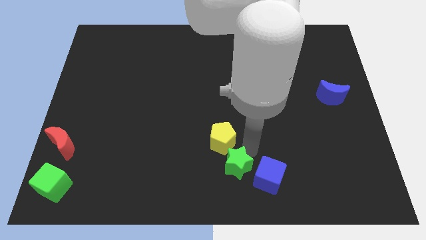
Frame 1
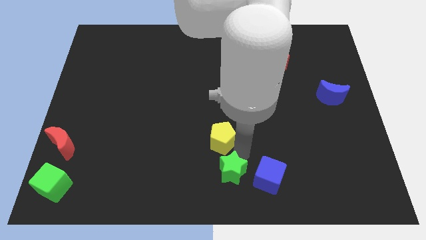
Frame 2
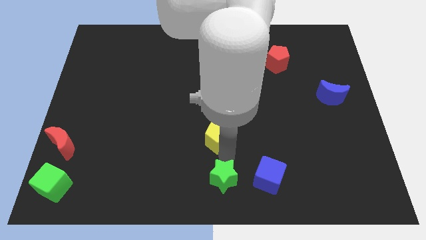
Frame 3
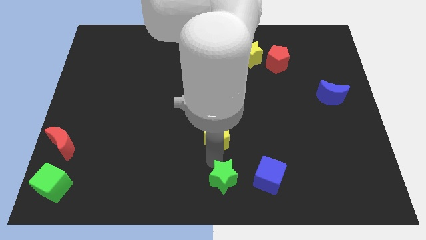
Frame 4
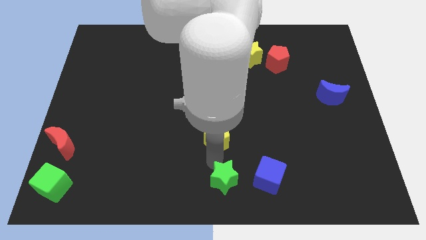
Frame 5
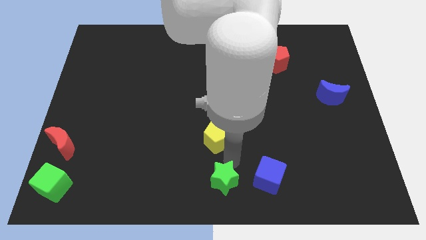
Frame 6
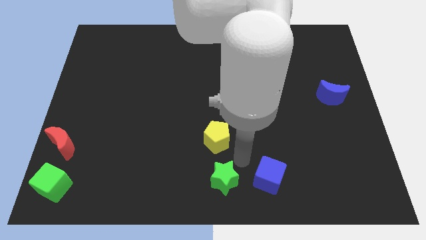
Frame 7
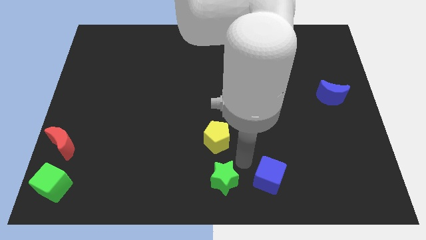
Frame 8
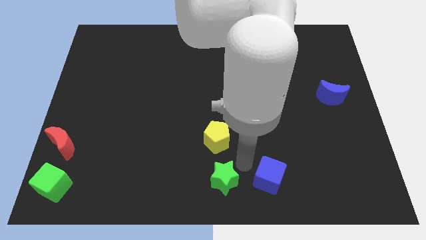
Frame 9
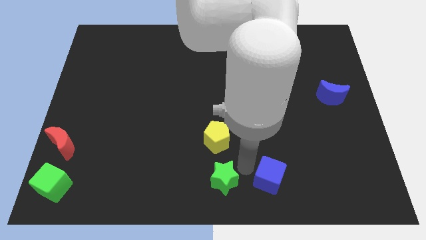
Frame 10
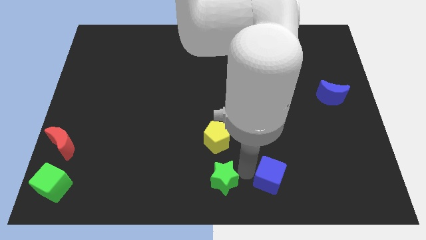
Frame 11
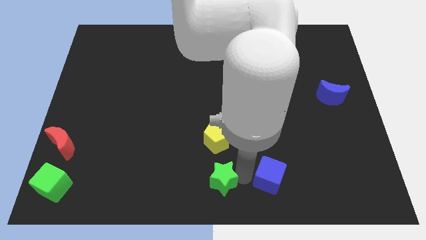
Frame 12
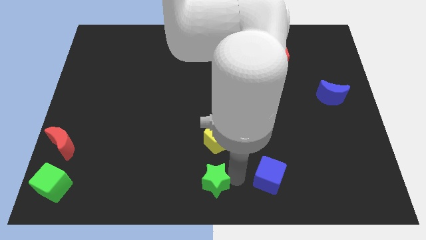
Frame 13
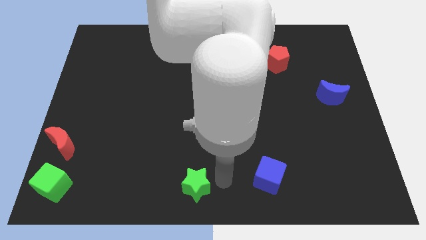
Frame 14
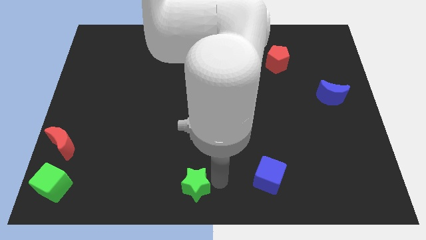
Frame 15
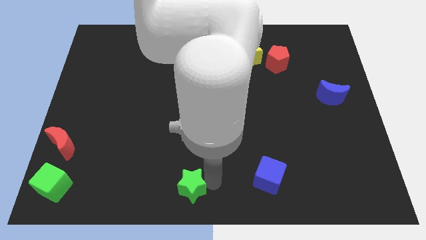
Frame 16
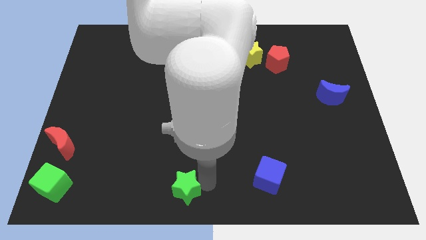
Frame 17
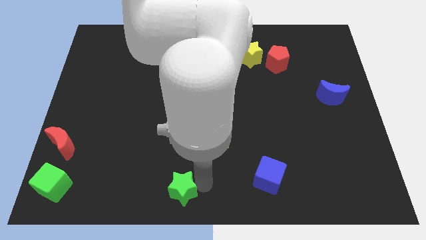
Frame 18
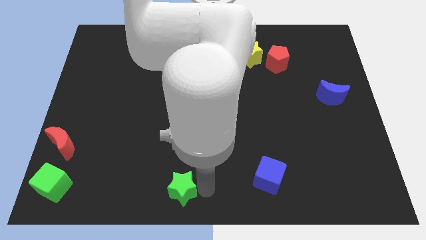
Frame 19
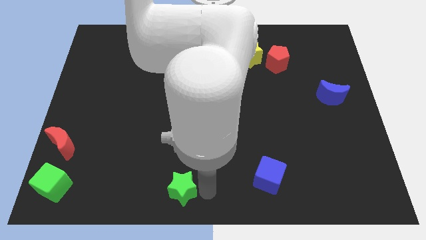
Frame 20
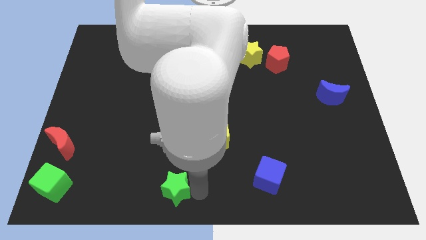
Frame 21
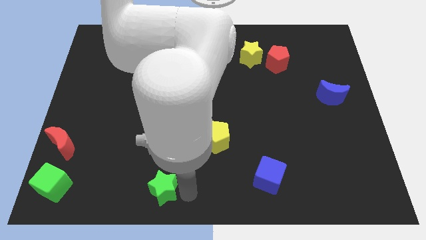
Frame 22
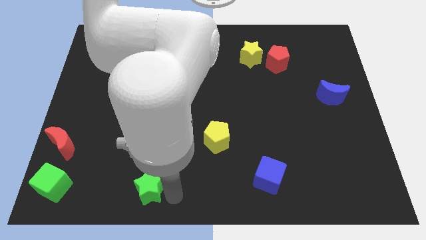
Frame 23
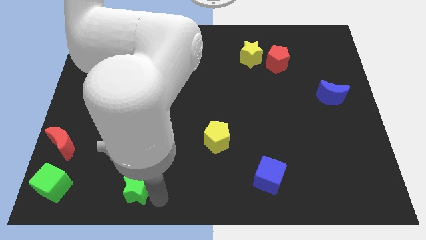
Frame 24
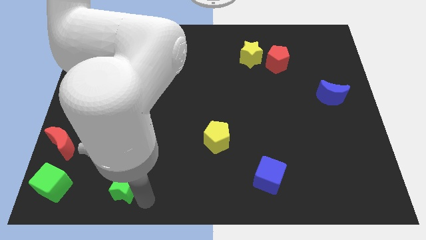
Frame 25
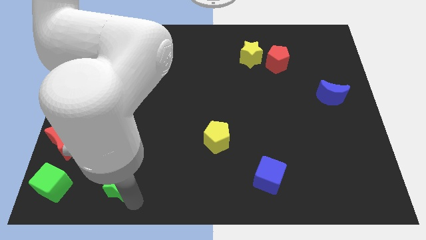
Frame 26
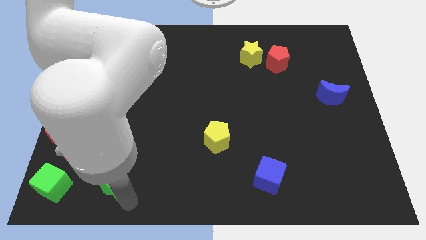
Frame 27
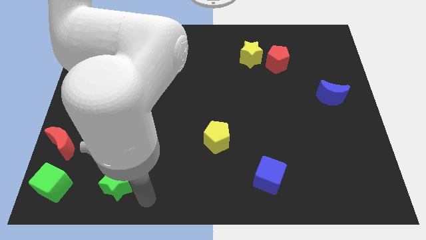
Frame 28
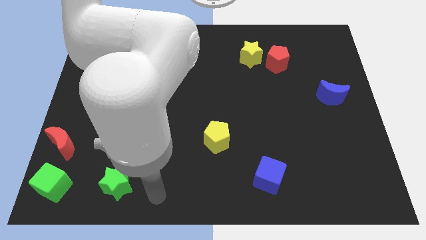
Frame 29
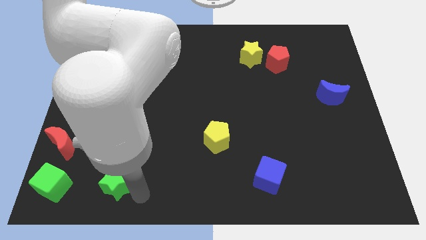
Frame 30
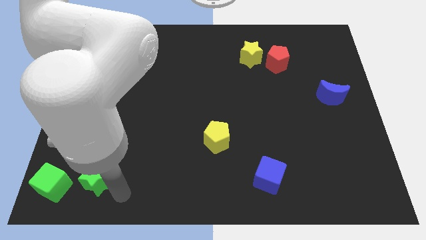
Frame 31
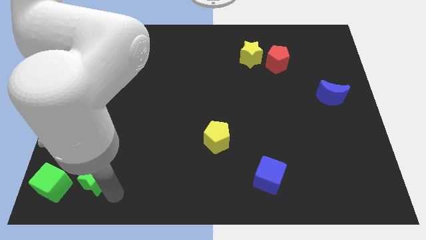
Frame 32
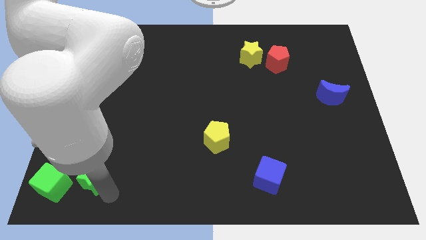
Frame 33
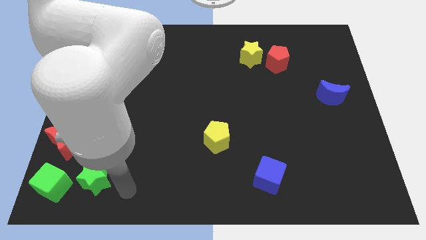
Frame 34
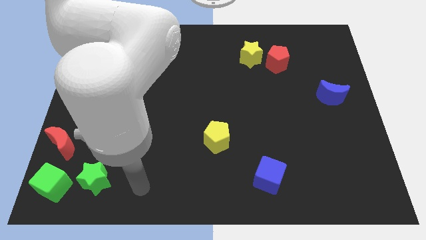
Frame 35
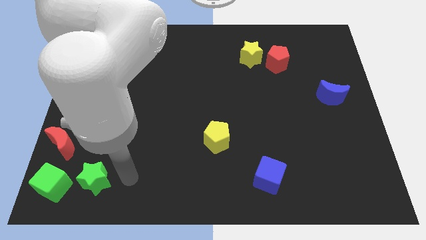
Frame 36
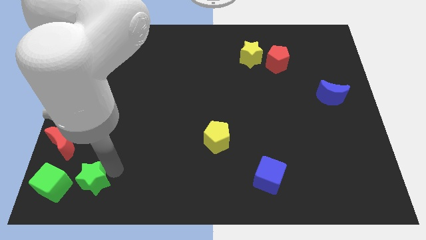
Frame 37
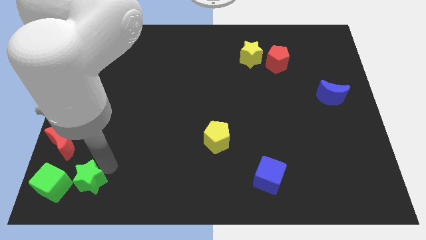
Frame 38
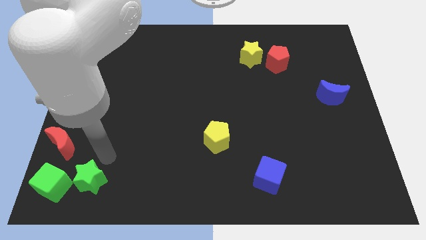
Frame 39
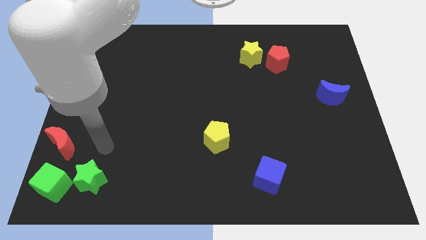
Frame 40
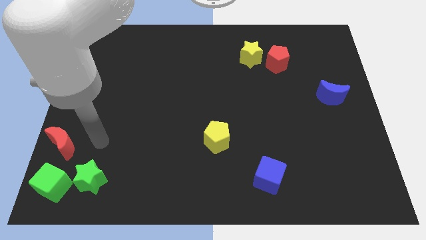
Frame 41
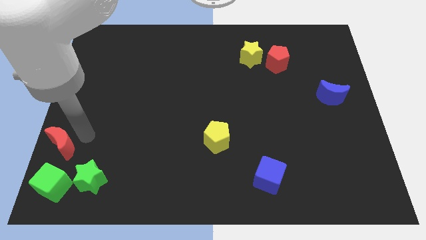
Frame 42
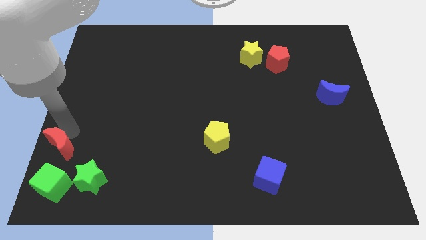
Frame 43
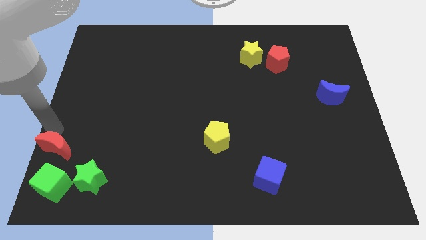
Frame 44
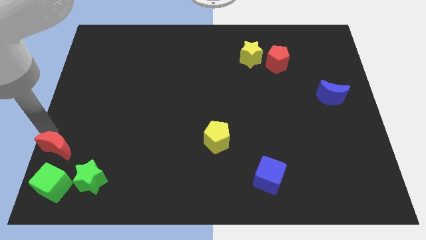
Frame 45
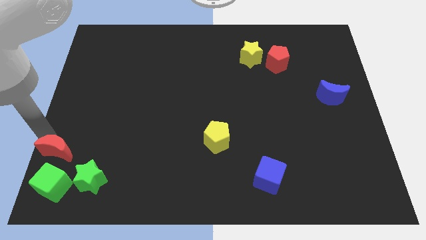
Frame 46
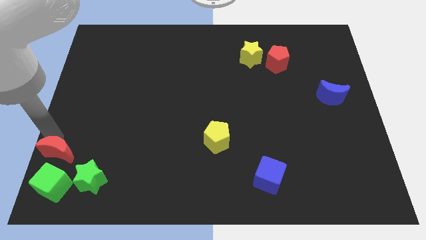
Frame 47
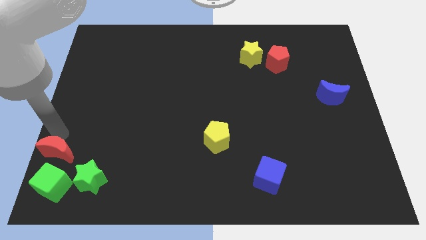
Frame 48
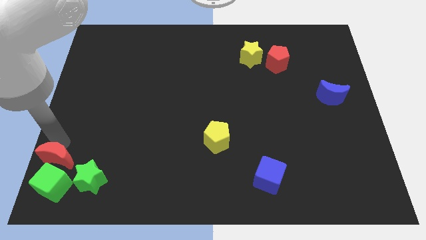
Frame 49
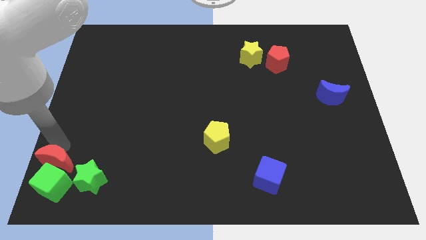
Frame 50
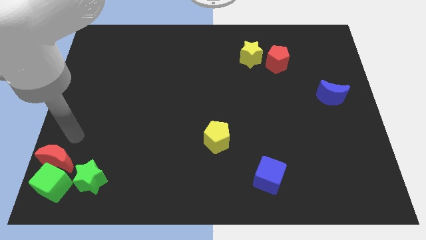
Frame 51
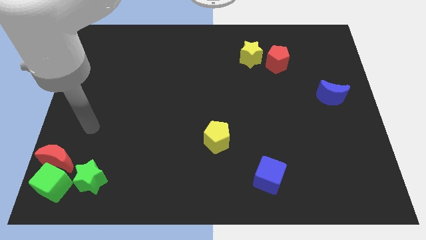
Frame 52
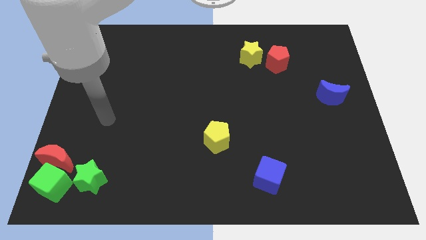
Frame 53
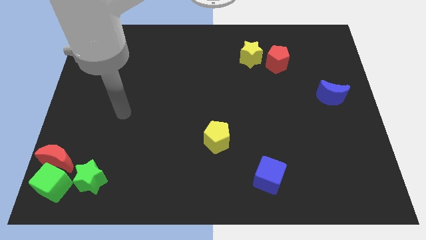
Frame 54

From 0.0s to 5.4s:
make the green star and red crescent to touch the green cube

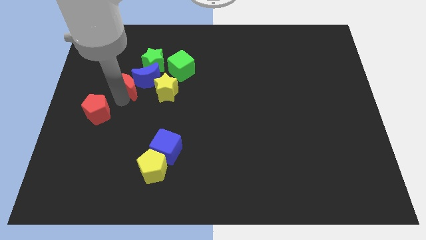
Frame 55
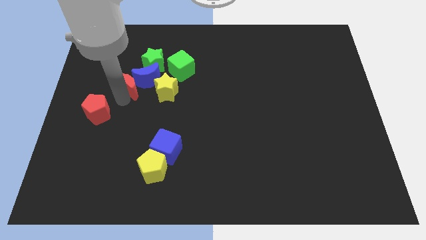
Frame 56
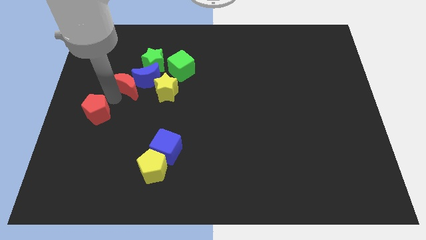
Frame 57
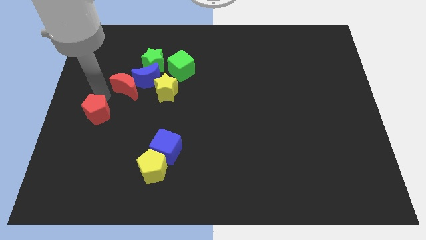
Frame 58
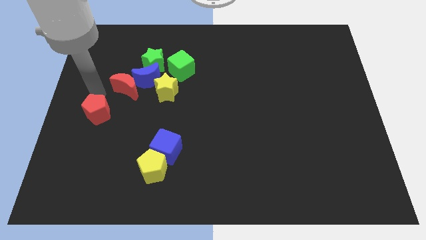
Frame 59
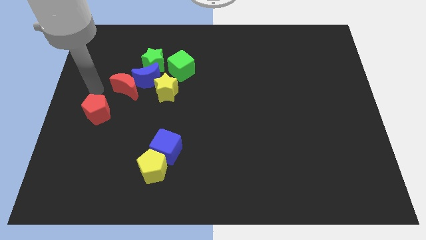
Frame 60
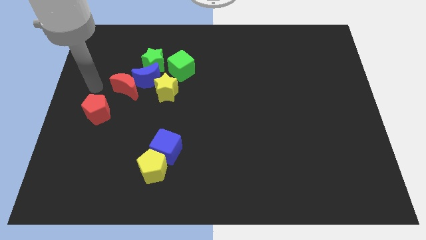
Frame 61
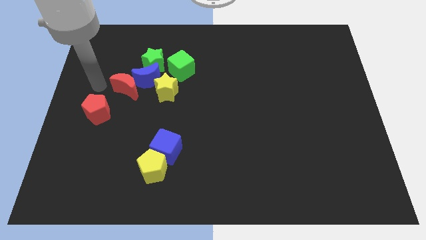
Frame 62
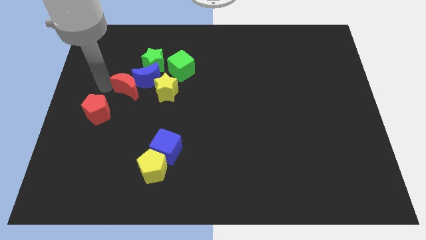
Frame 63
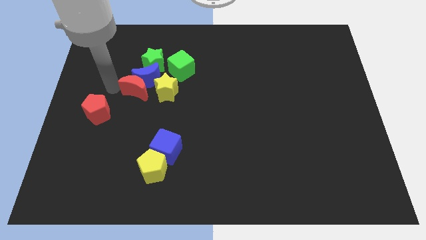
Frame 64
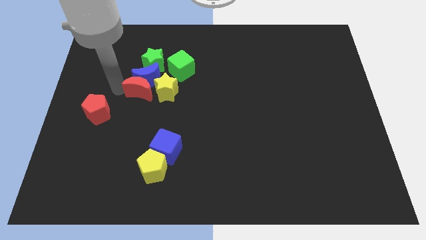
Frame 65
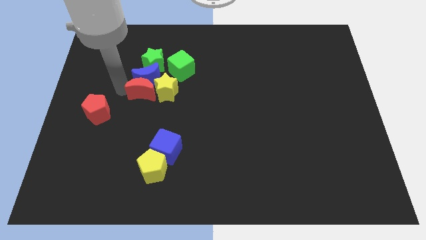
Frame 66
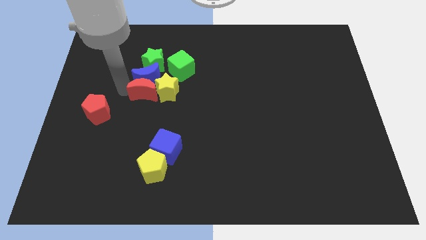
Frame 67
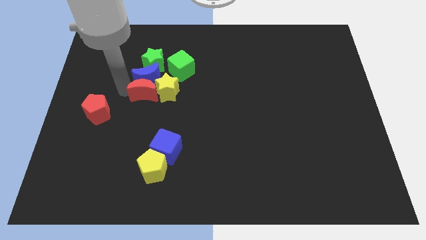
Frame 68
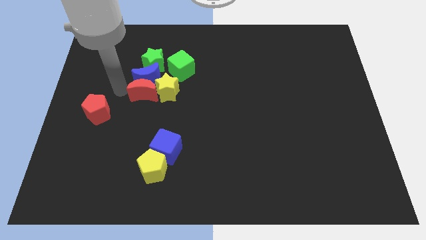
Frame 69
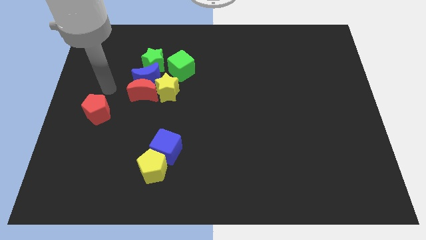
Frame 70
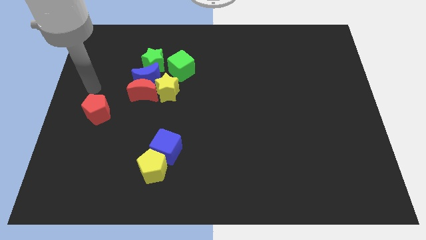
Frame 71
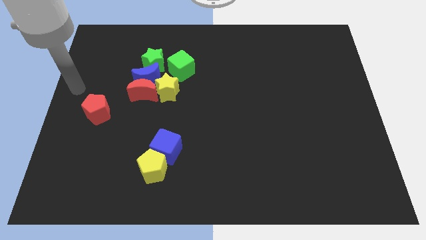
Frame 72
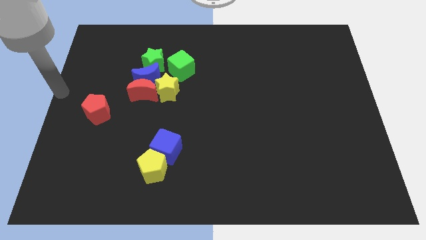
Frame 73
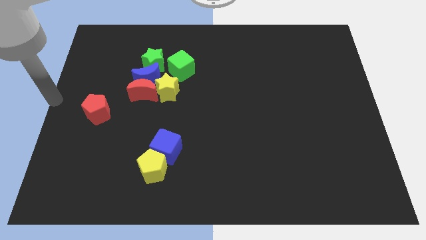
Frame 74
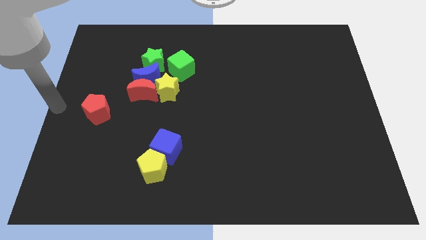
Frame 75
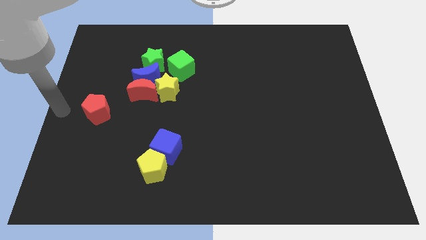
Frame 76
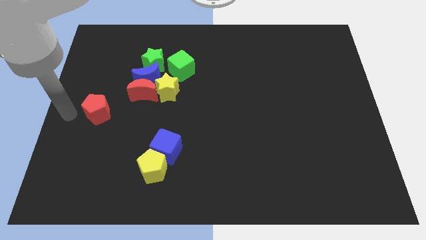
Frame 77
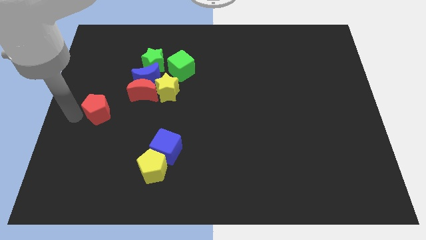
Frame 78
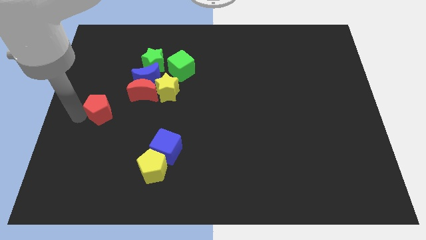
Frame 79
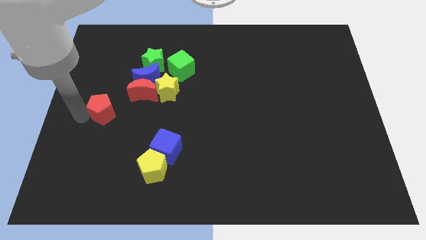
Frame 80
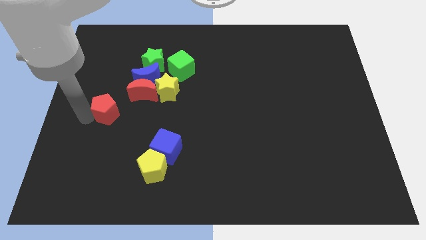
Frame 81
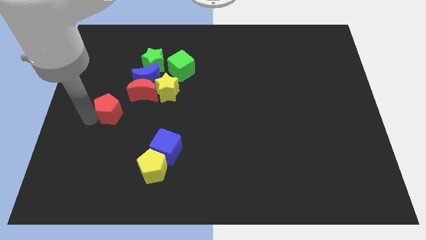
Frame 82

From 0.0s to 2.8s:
push the red crescent close to the yellow star

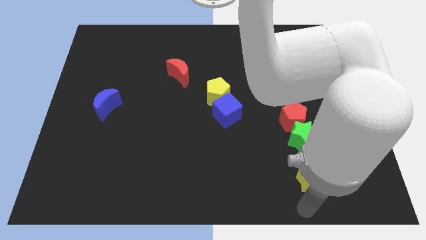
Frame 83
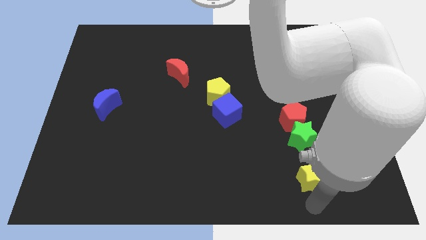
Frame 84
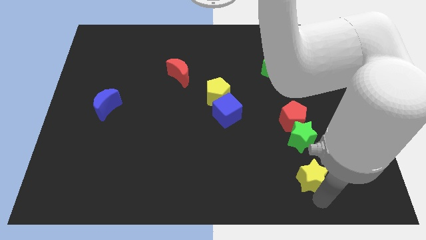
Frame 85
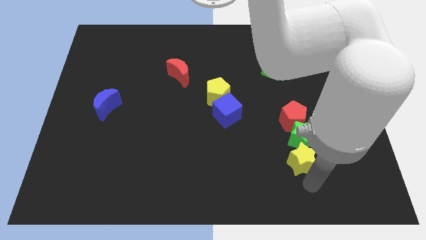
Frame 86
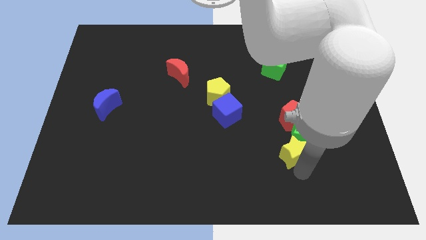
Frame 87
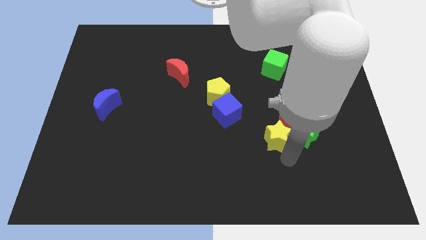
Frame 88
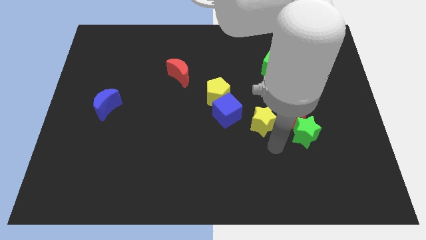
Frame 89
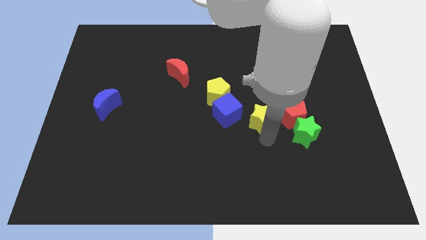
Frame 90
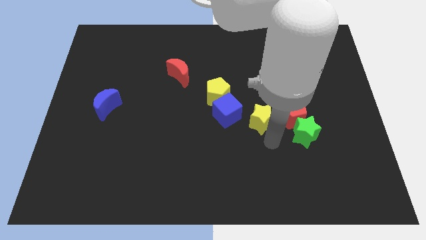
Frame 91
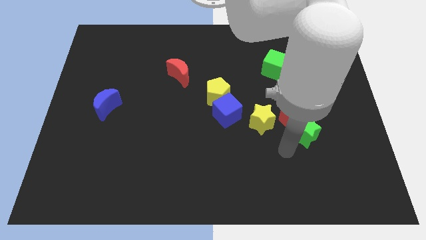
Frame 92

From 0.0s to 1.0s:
place the yellow star in between the blue cube and the red pentagon
